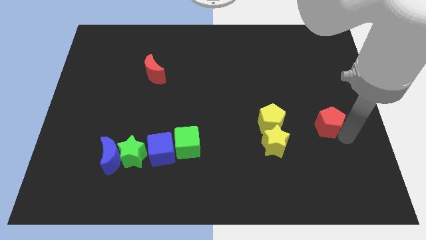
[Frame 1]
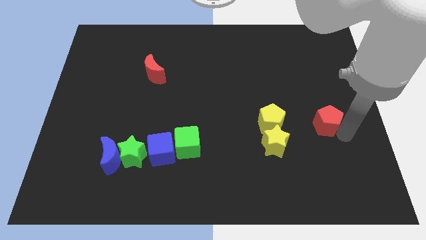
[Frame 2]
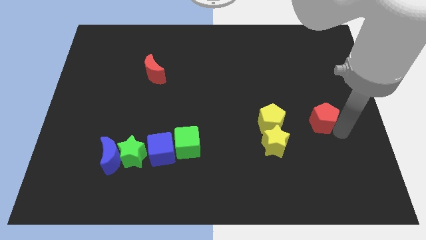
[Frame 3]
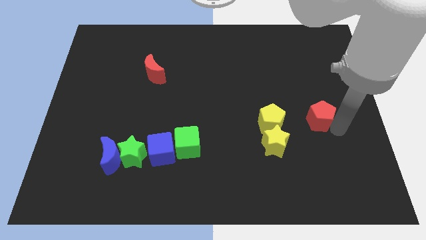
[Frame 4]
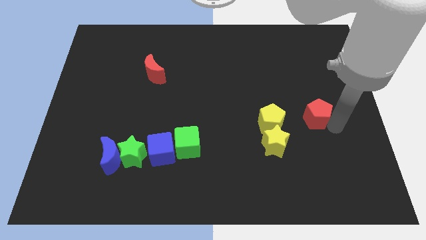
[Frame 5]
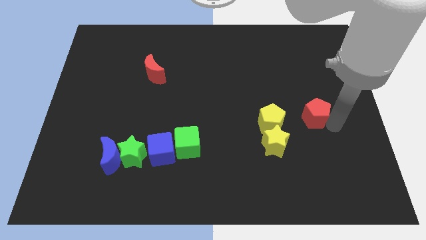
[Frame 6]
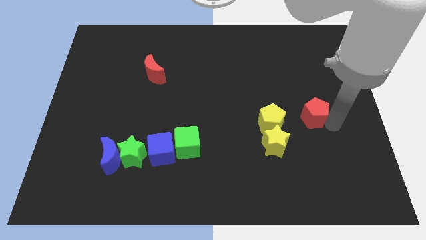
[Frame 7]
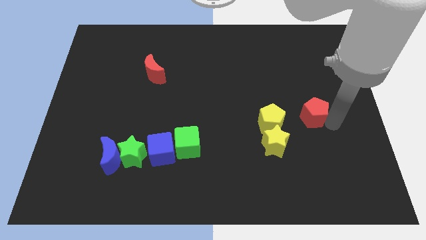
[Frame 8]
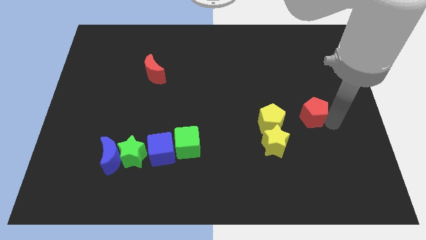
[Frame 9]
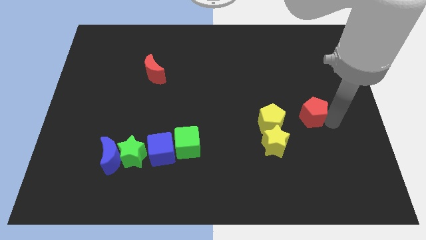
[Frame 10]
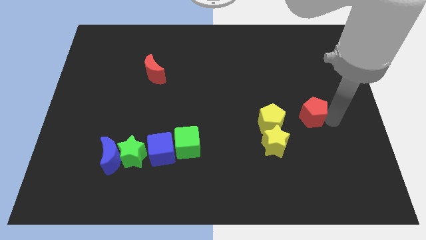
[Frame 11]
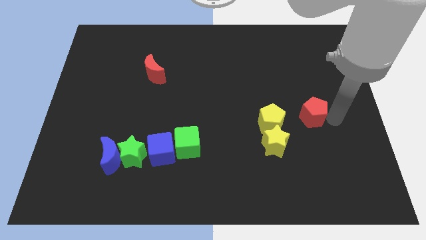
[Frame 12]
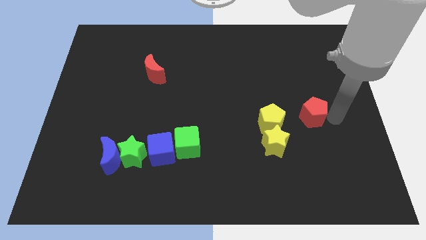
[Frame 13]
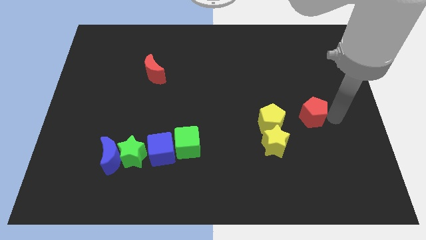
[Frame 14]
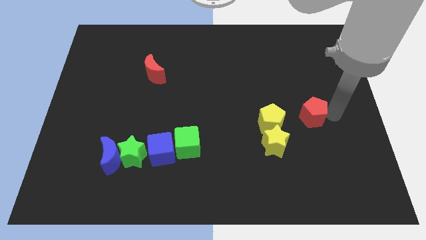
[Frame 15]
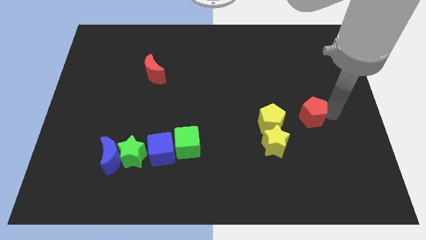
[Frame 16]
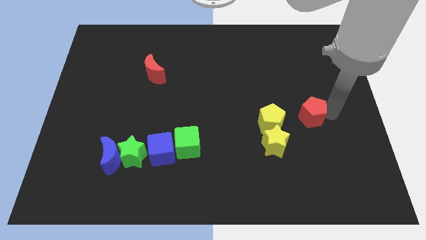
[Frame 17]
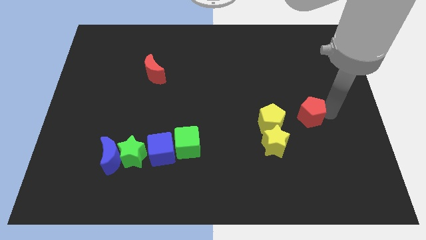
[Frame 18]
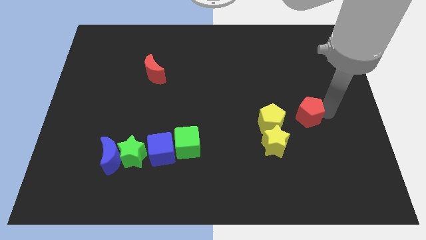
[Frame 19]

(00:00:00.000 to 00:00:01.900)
move the red pentagon right to the yellow pentagon

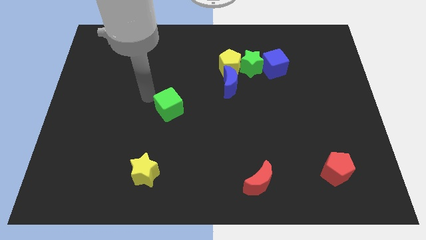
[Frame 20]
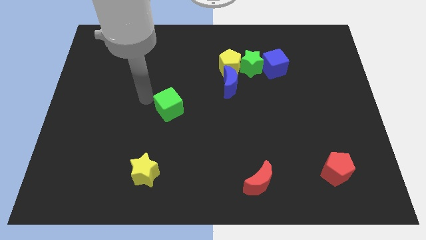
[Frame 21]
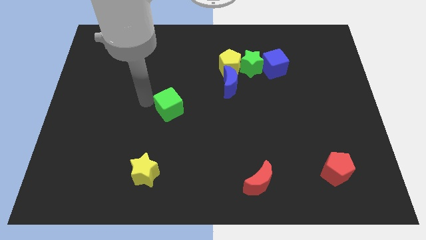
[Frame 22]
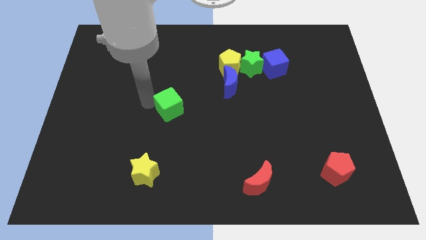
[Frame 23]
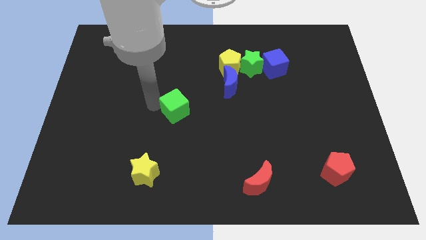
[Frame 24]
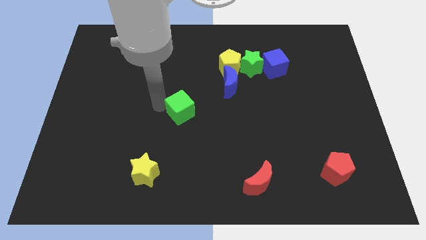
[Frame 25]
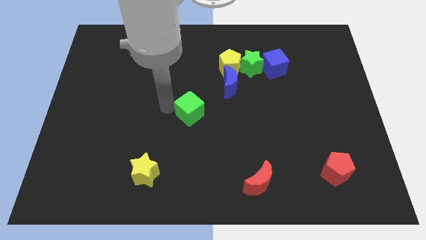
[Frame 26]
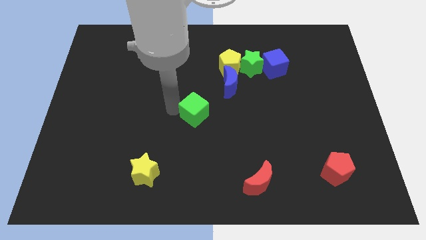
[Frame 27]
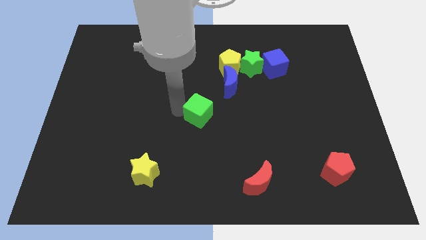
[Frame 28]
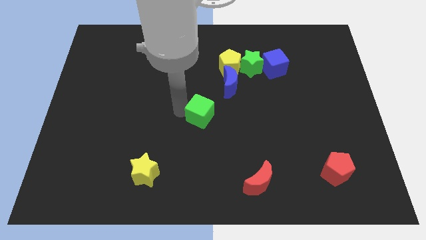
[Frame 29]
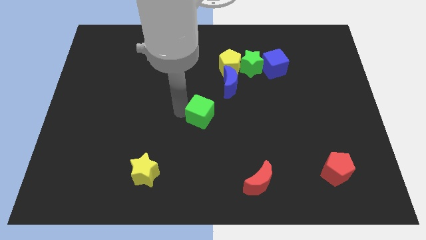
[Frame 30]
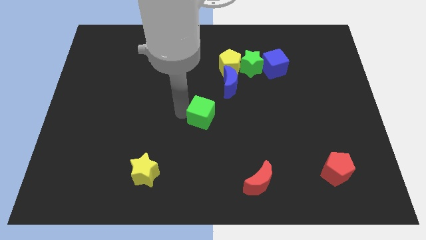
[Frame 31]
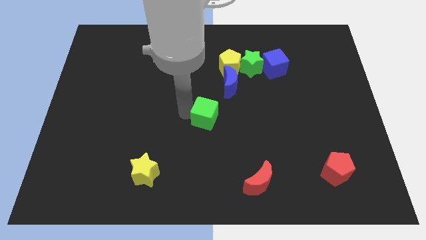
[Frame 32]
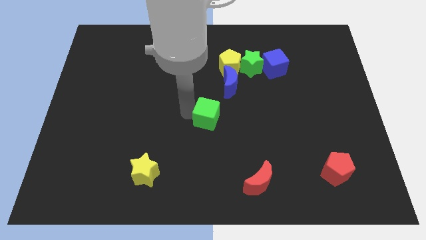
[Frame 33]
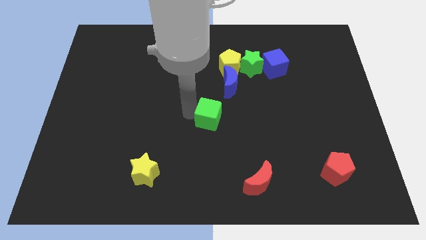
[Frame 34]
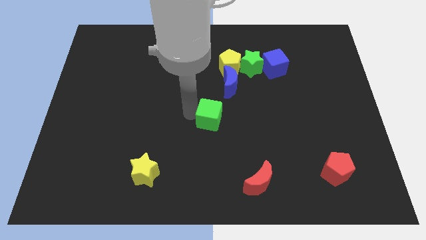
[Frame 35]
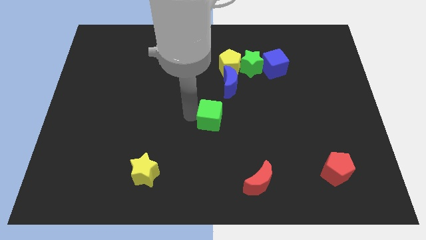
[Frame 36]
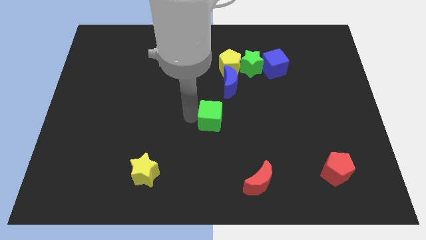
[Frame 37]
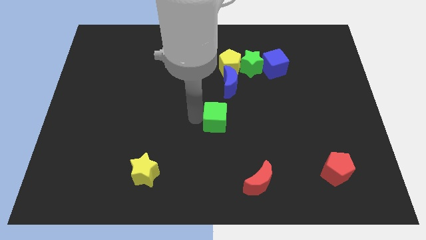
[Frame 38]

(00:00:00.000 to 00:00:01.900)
place the green cube towards the centre of the board

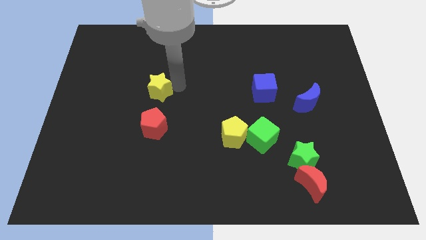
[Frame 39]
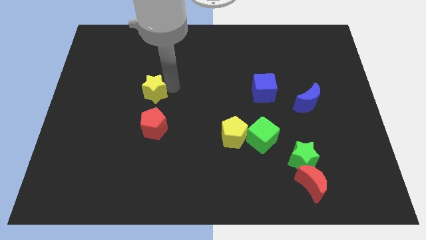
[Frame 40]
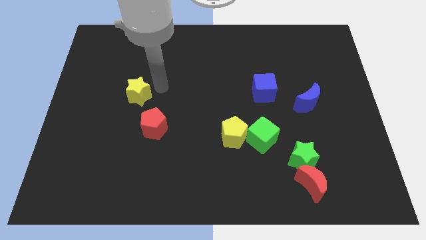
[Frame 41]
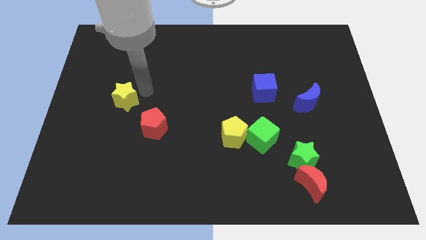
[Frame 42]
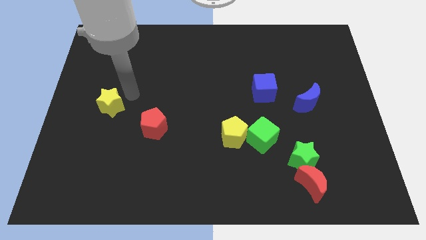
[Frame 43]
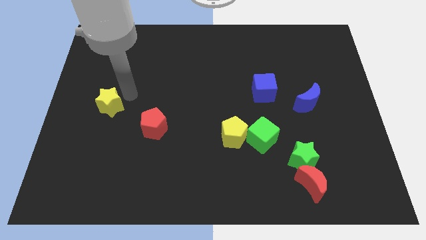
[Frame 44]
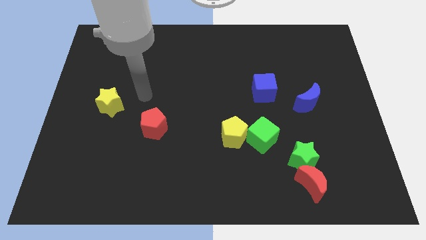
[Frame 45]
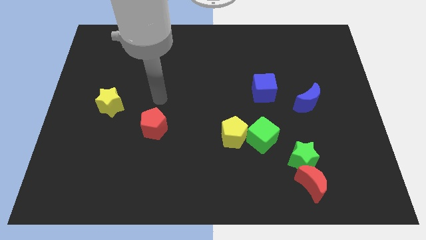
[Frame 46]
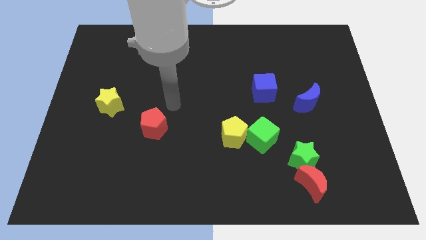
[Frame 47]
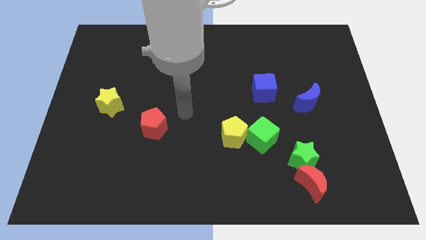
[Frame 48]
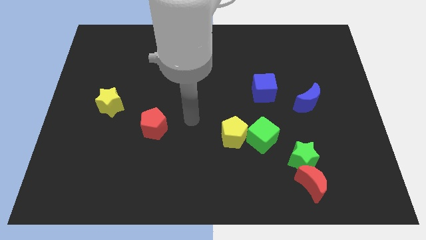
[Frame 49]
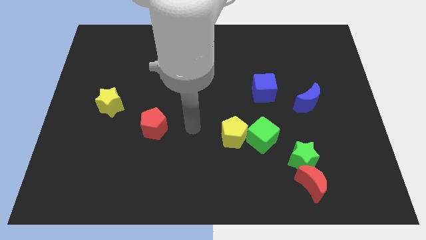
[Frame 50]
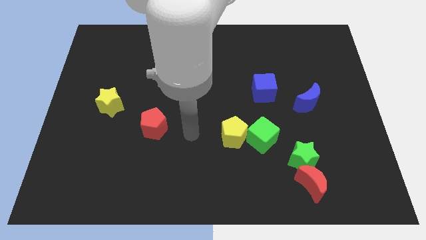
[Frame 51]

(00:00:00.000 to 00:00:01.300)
move the yellow star diagonal to the red pentagon

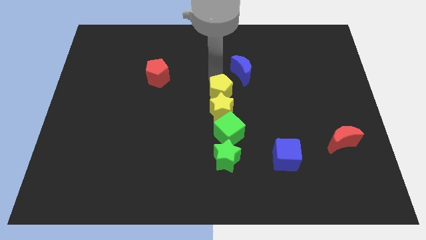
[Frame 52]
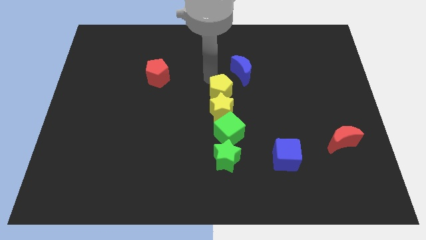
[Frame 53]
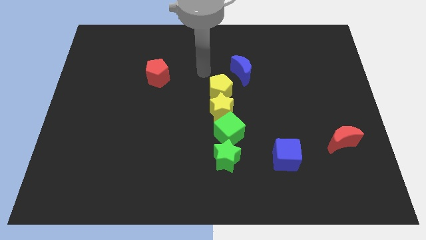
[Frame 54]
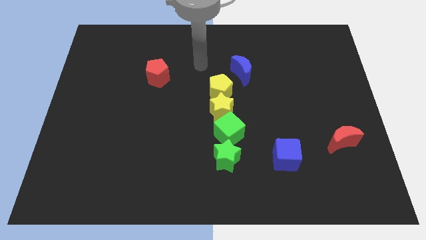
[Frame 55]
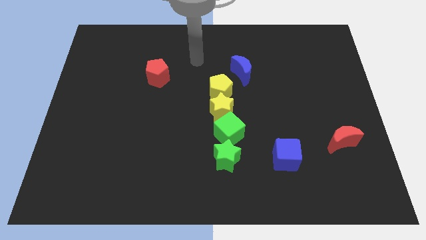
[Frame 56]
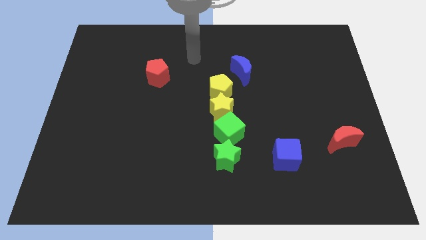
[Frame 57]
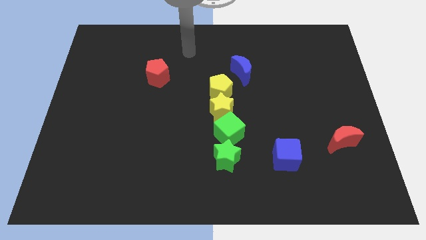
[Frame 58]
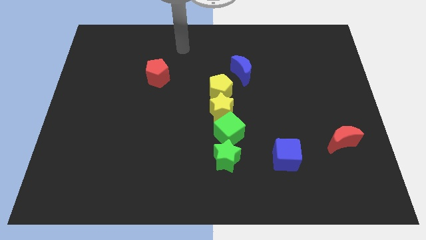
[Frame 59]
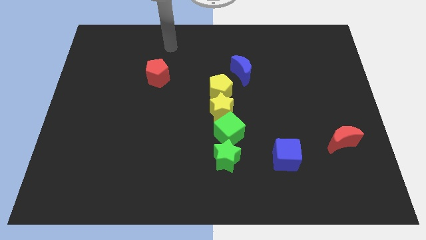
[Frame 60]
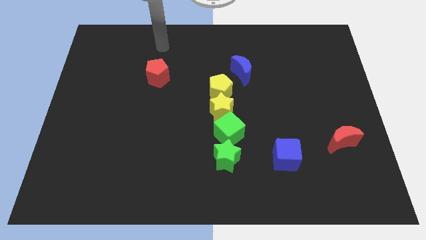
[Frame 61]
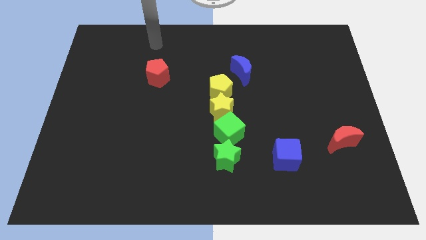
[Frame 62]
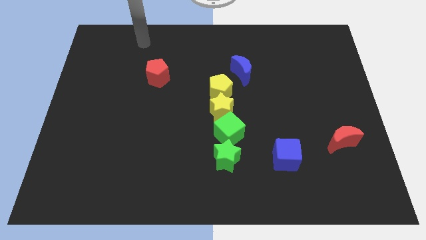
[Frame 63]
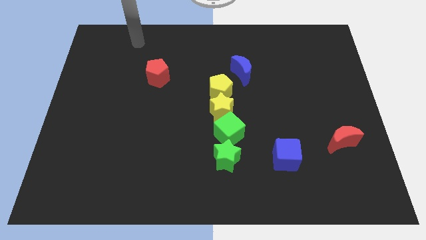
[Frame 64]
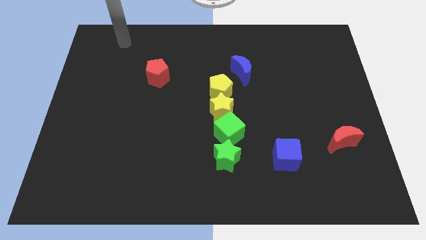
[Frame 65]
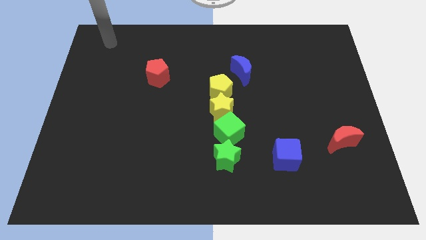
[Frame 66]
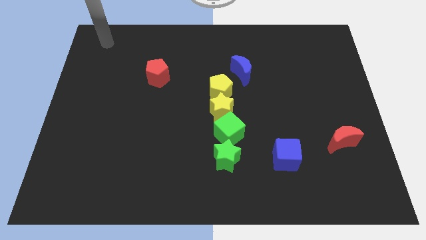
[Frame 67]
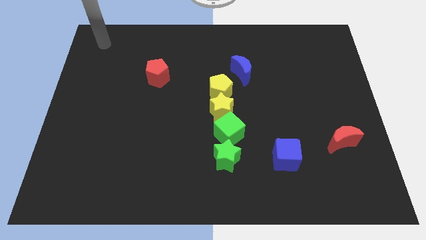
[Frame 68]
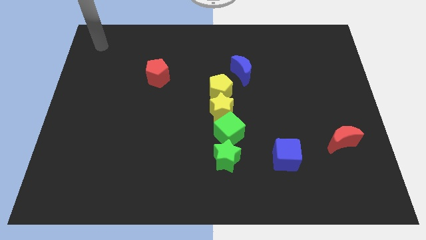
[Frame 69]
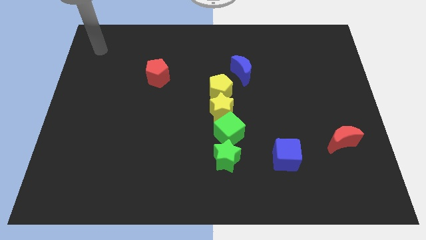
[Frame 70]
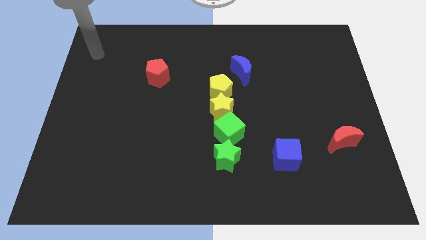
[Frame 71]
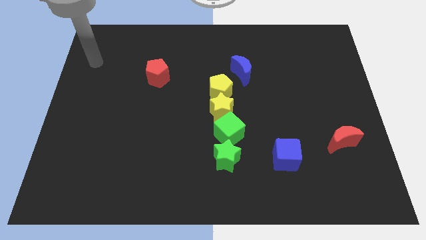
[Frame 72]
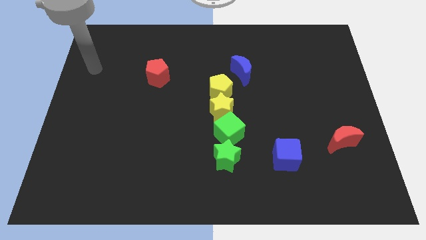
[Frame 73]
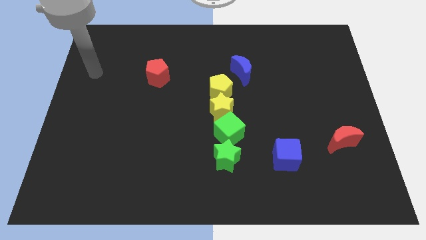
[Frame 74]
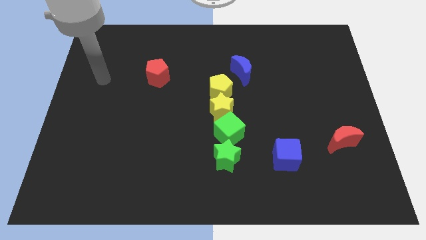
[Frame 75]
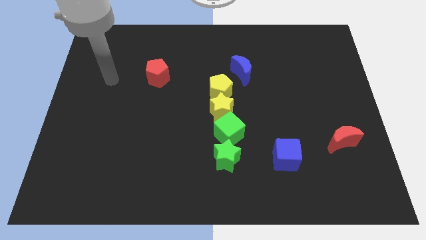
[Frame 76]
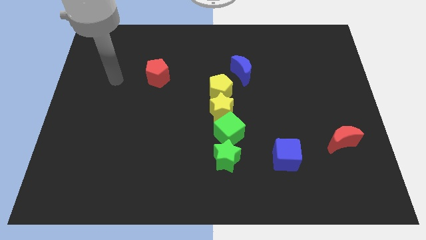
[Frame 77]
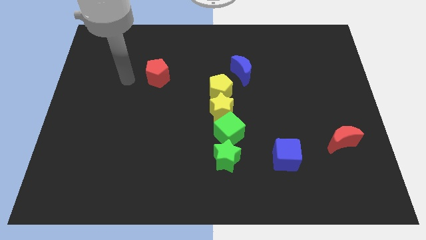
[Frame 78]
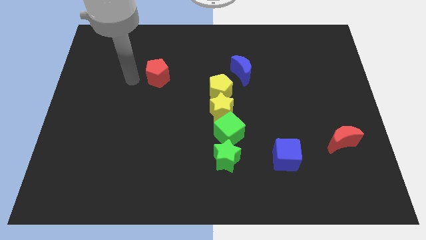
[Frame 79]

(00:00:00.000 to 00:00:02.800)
move the arm close to red pentagon

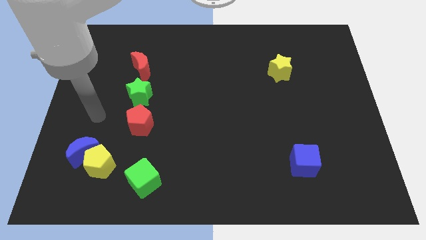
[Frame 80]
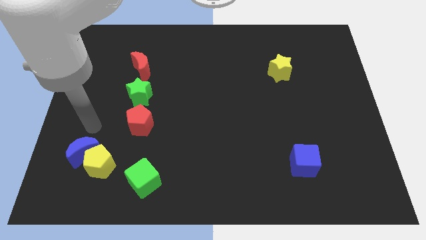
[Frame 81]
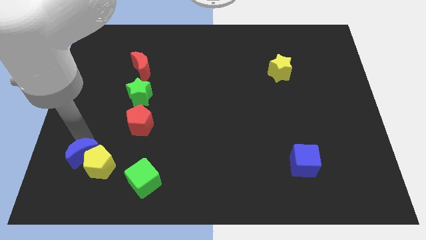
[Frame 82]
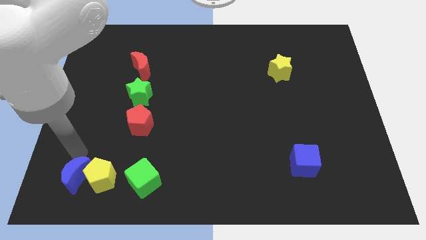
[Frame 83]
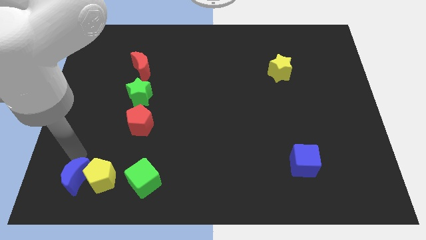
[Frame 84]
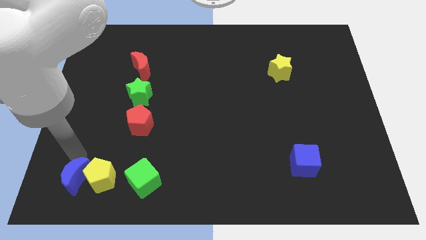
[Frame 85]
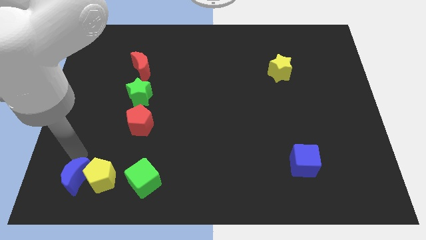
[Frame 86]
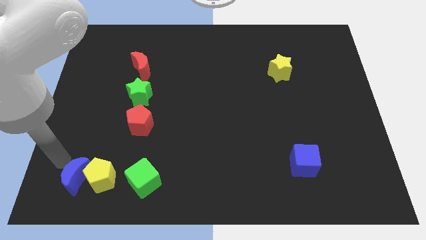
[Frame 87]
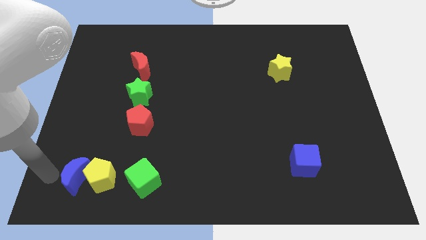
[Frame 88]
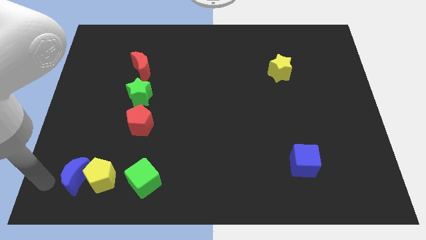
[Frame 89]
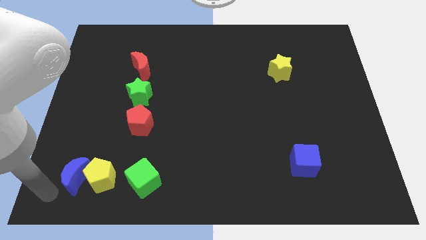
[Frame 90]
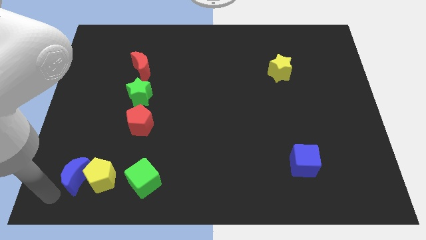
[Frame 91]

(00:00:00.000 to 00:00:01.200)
place red moon to the bottom of the board
